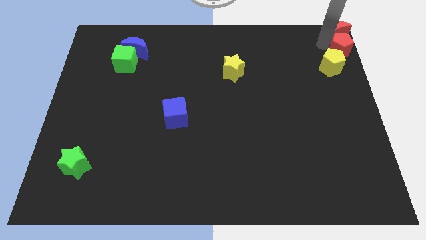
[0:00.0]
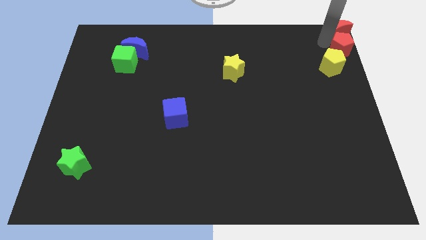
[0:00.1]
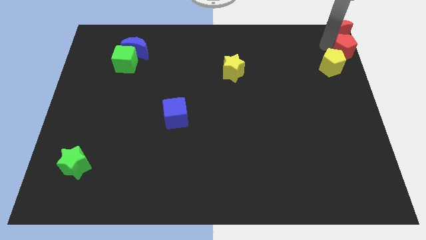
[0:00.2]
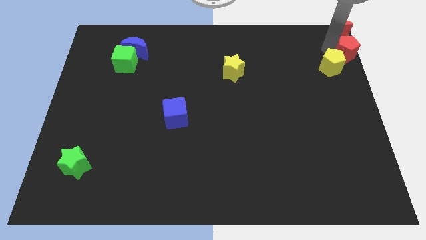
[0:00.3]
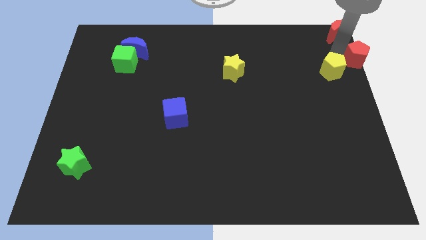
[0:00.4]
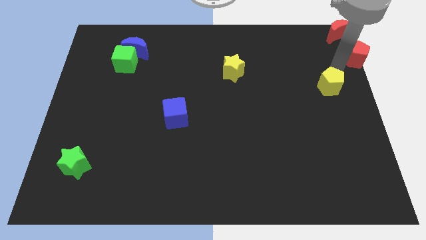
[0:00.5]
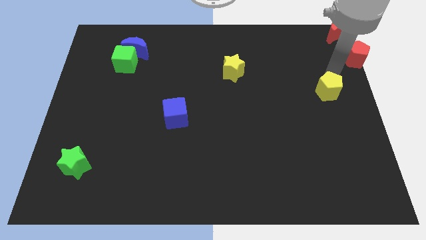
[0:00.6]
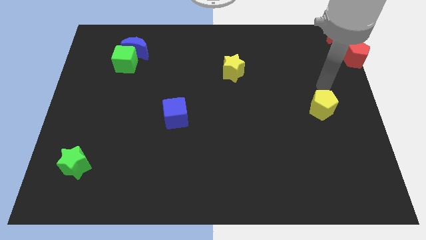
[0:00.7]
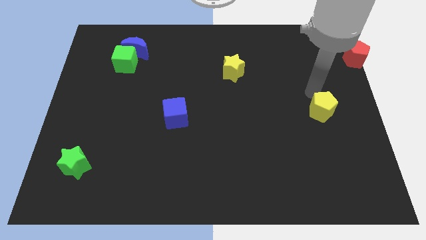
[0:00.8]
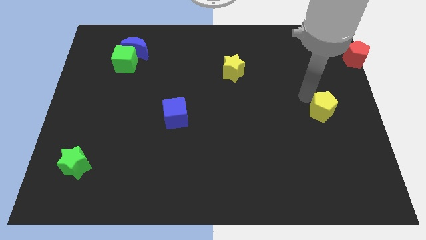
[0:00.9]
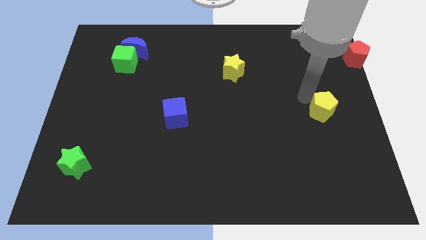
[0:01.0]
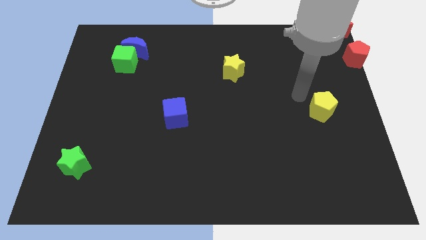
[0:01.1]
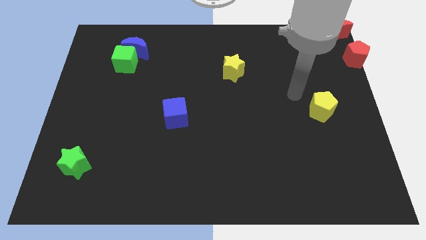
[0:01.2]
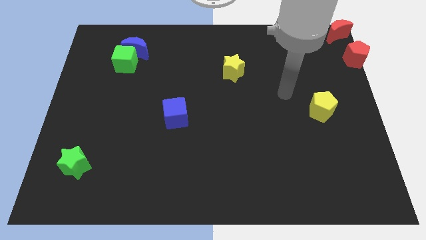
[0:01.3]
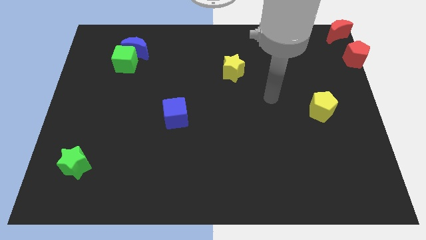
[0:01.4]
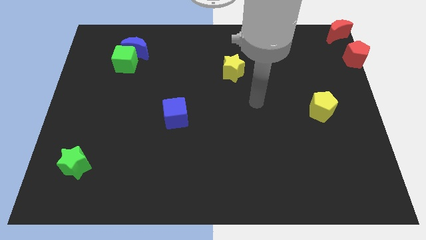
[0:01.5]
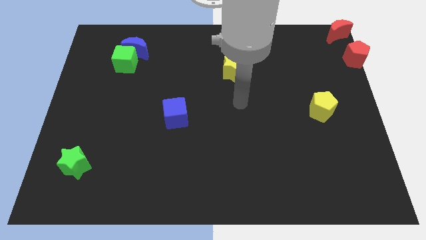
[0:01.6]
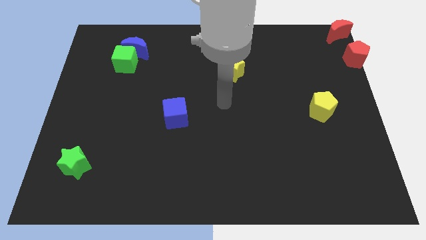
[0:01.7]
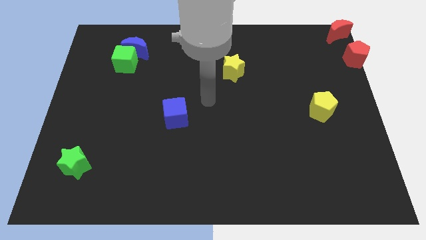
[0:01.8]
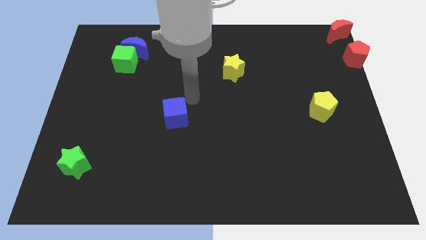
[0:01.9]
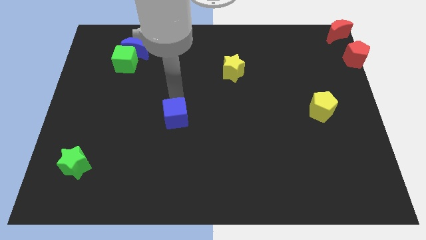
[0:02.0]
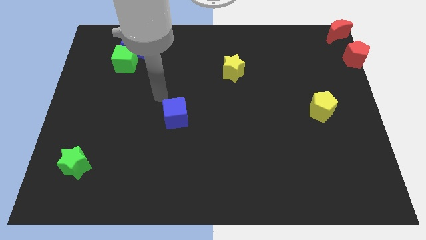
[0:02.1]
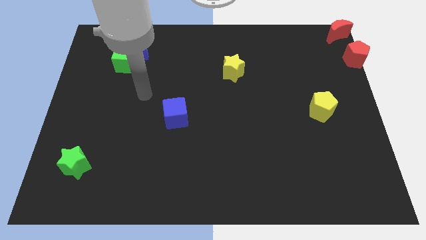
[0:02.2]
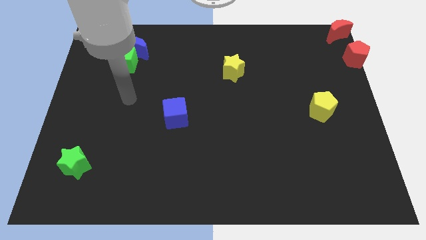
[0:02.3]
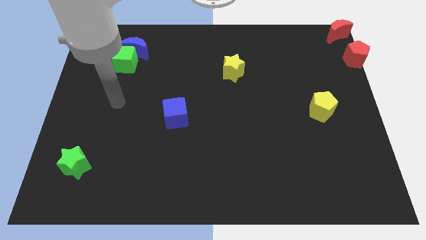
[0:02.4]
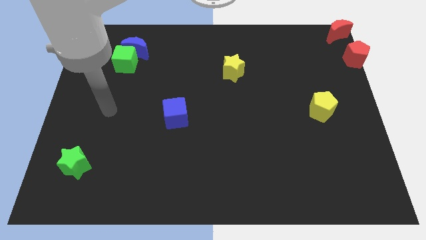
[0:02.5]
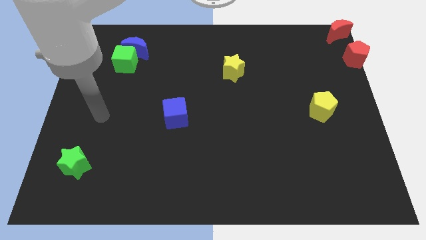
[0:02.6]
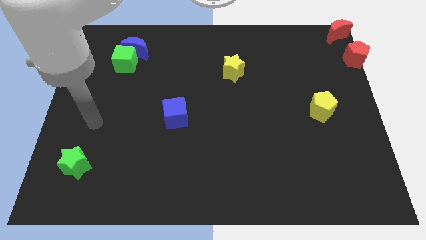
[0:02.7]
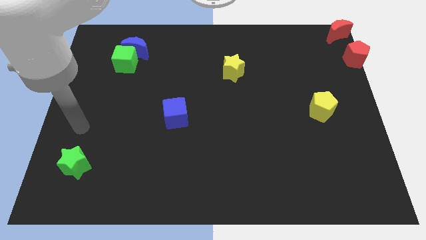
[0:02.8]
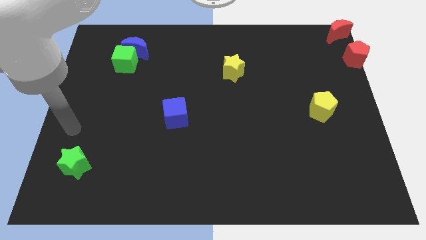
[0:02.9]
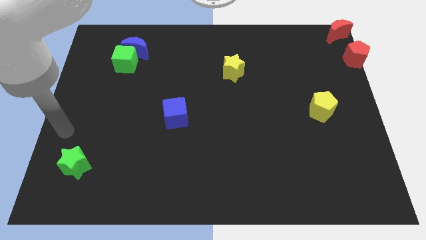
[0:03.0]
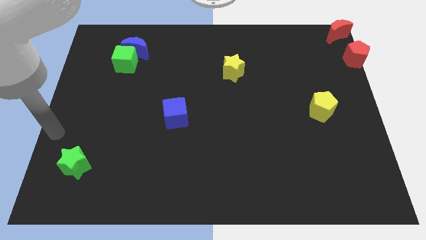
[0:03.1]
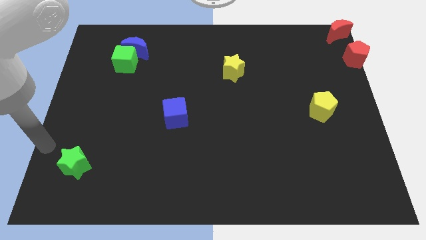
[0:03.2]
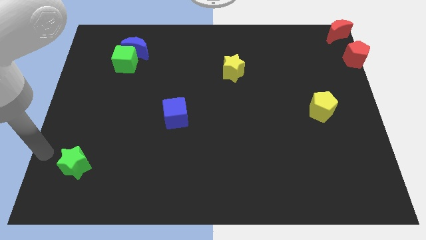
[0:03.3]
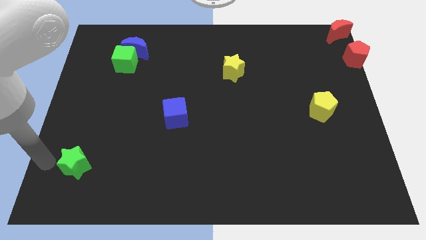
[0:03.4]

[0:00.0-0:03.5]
move your arm towards the green star

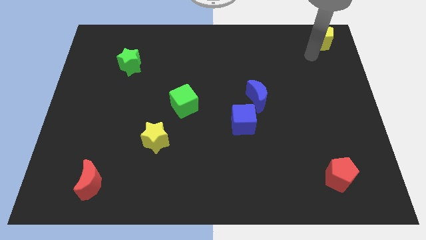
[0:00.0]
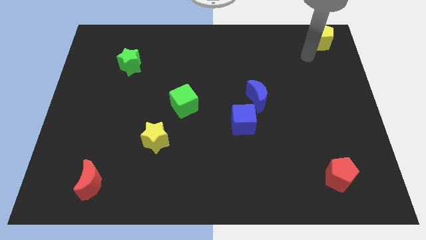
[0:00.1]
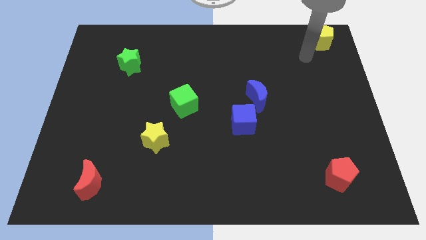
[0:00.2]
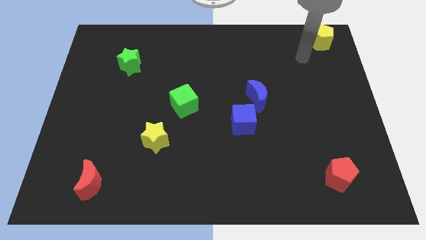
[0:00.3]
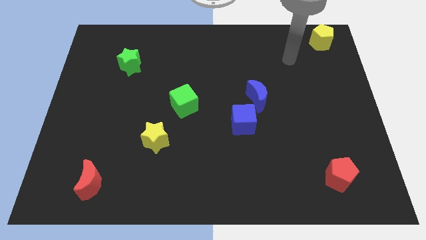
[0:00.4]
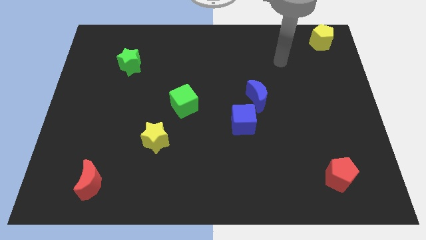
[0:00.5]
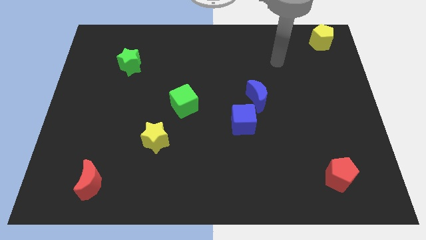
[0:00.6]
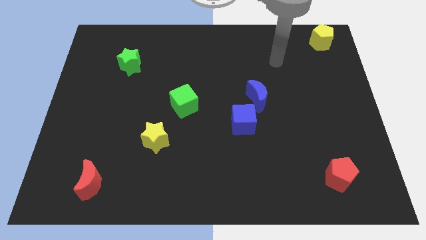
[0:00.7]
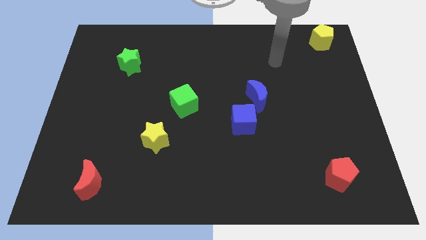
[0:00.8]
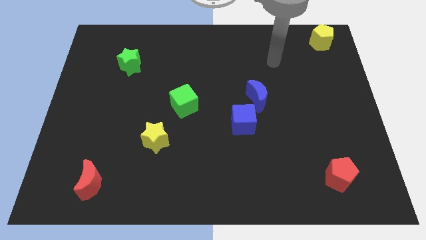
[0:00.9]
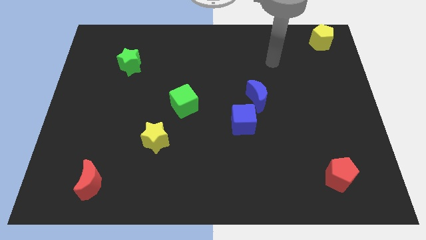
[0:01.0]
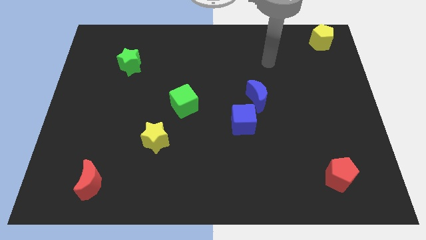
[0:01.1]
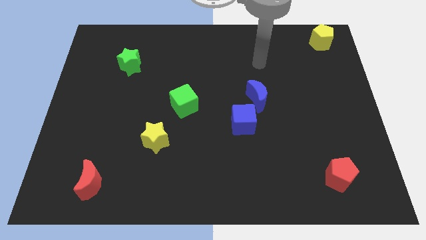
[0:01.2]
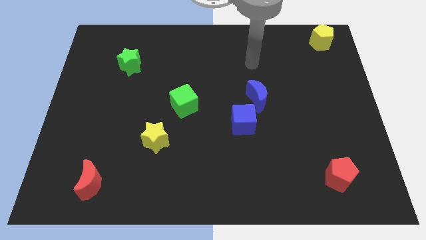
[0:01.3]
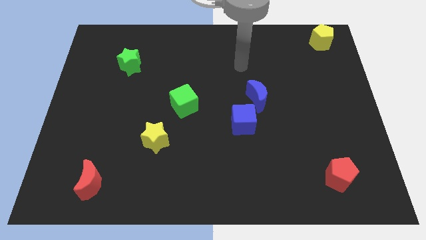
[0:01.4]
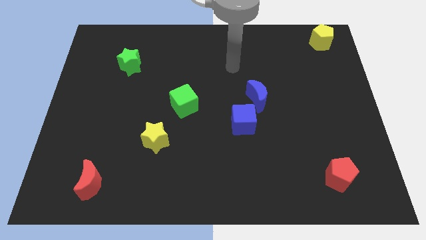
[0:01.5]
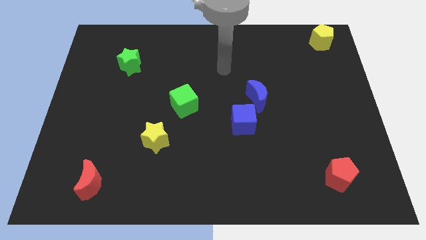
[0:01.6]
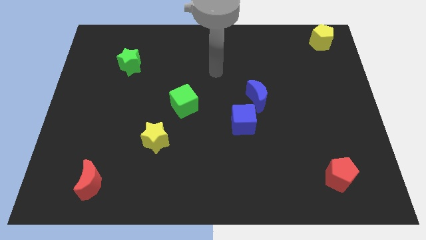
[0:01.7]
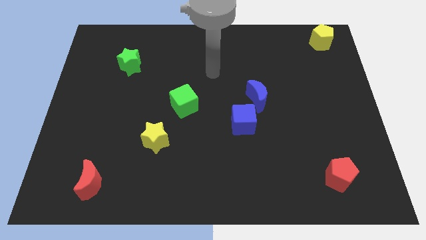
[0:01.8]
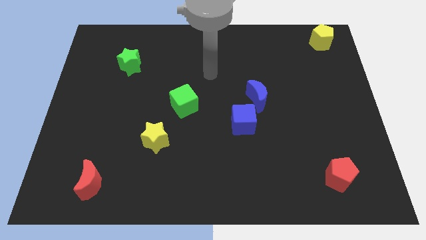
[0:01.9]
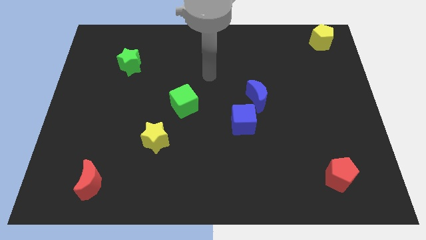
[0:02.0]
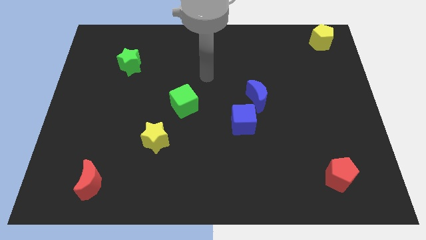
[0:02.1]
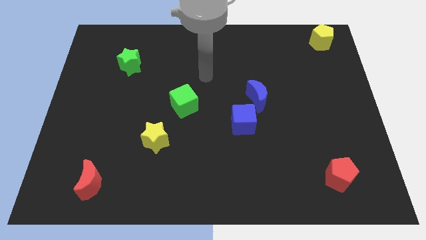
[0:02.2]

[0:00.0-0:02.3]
move your arm towards the green cube

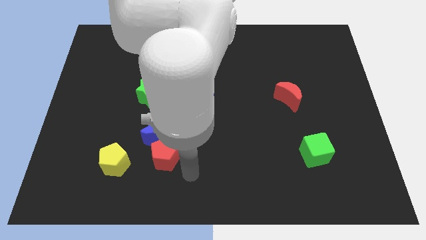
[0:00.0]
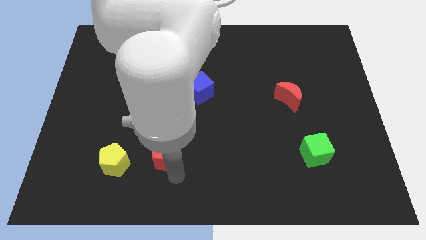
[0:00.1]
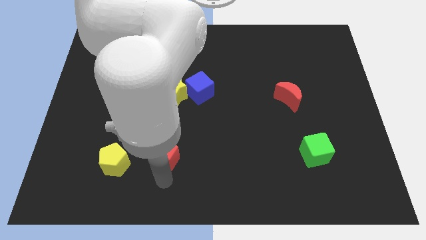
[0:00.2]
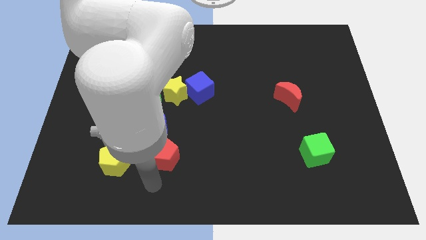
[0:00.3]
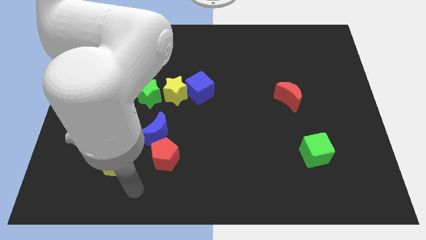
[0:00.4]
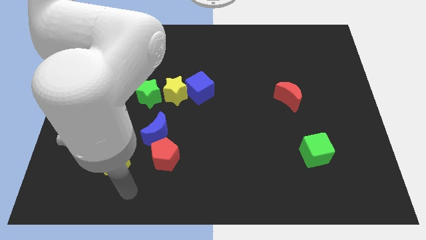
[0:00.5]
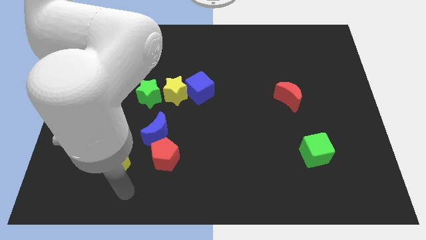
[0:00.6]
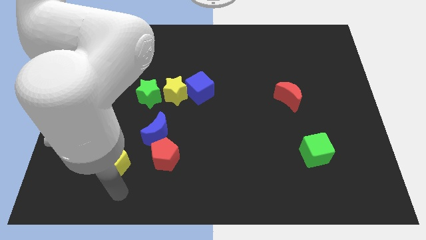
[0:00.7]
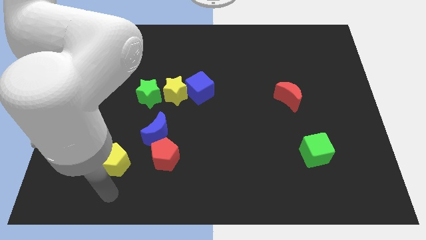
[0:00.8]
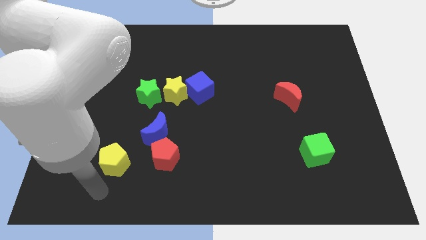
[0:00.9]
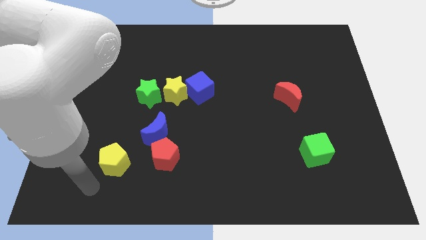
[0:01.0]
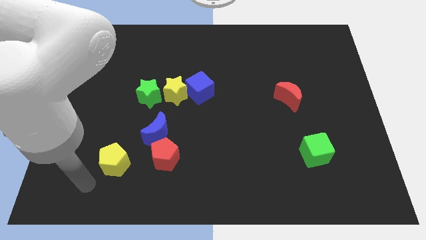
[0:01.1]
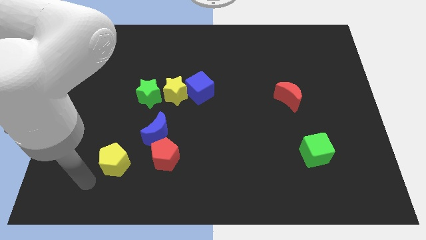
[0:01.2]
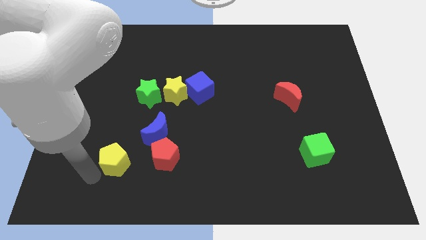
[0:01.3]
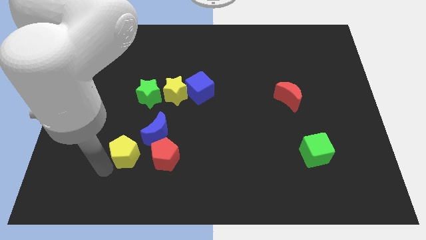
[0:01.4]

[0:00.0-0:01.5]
move the arm close to the yellow pentagon

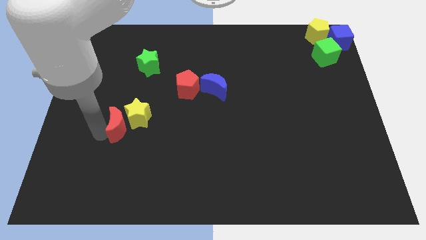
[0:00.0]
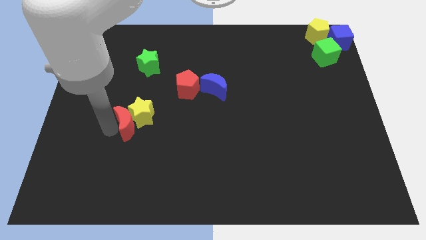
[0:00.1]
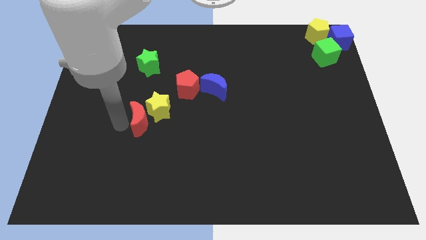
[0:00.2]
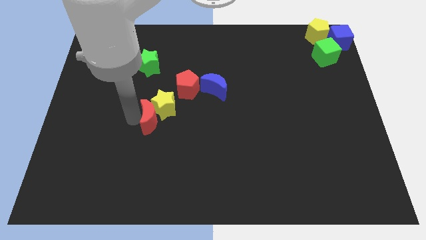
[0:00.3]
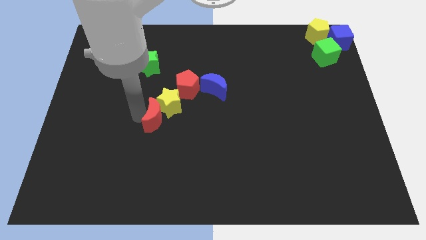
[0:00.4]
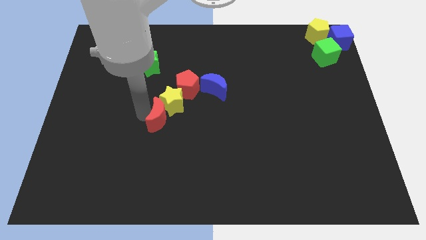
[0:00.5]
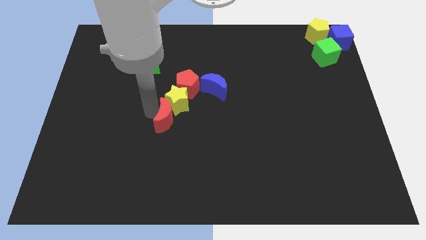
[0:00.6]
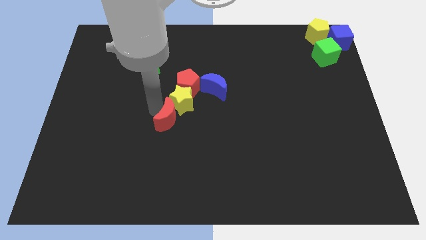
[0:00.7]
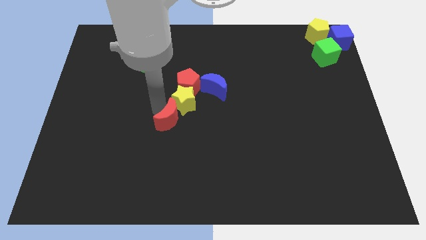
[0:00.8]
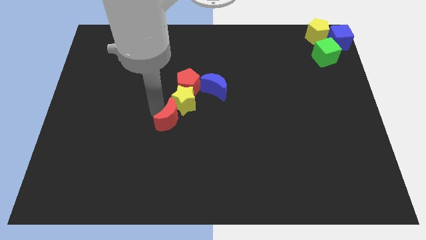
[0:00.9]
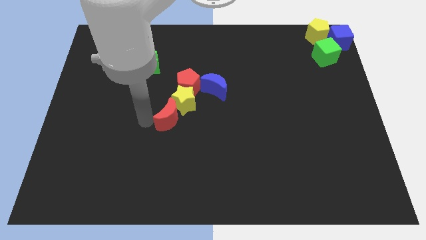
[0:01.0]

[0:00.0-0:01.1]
push the red crescent along with yellow star into the red pentagon

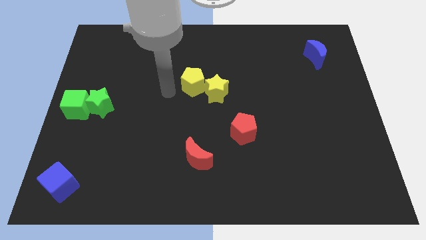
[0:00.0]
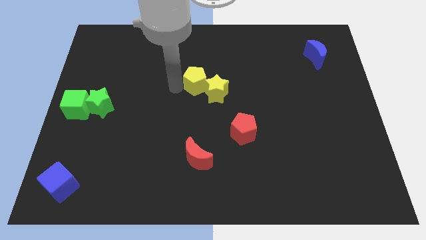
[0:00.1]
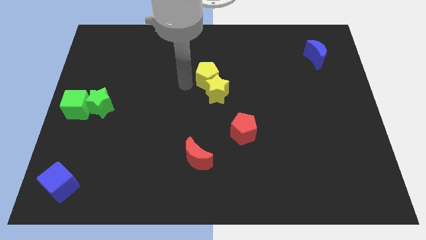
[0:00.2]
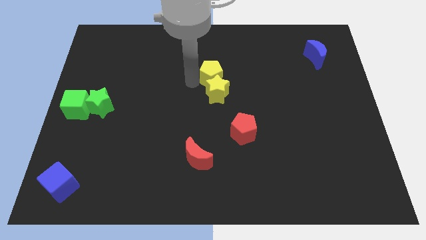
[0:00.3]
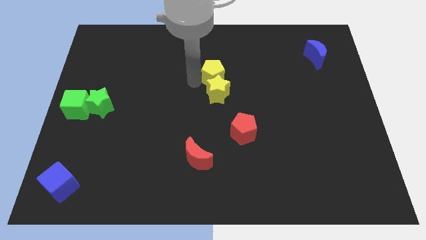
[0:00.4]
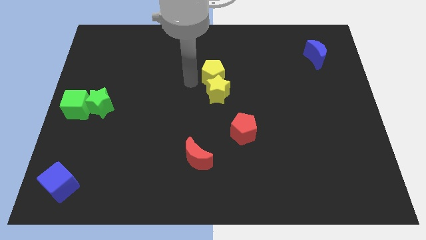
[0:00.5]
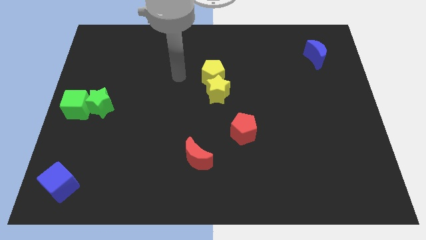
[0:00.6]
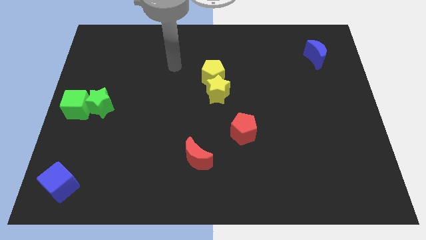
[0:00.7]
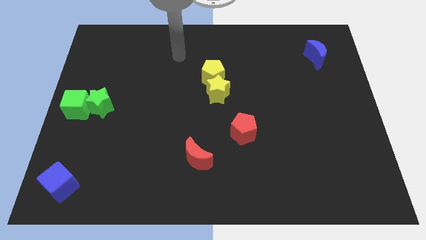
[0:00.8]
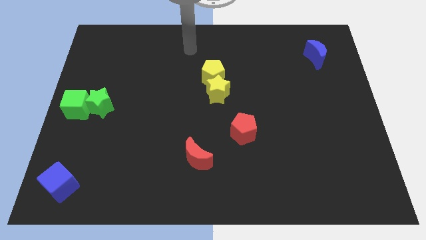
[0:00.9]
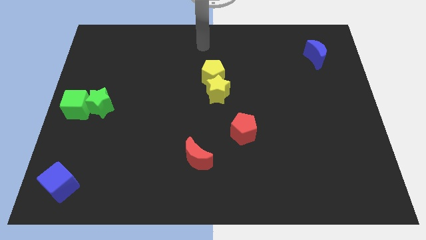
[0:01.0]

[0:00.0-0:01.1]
push the yellow pentagon to the top of the yellow star
